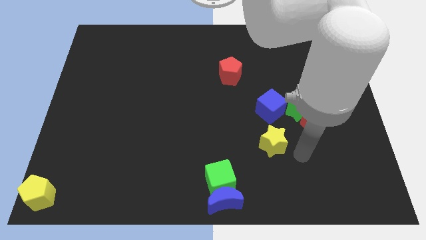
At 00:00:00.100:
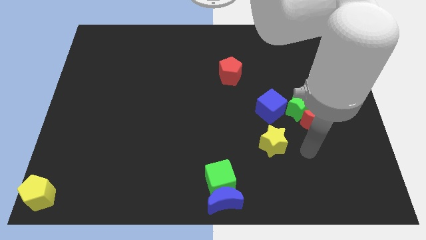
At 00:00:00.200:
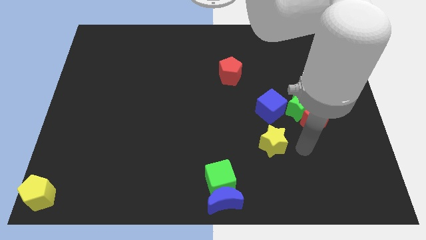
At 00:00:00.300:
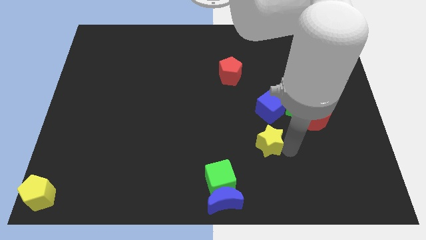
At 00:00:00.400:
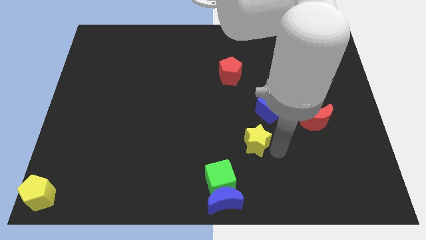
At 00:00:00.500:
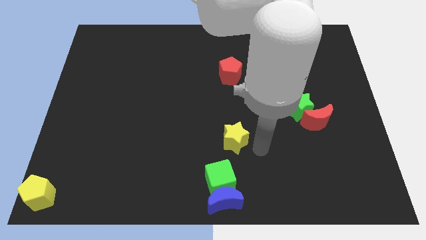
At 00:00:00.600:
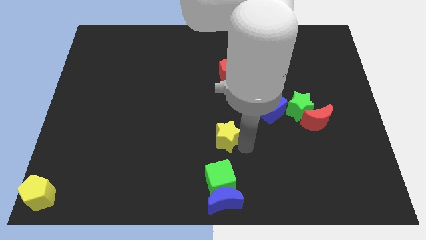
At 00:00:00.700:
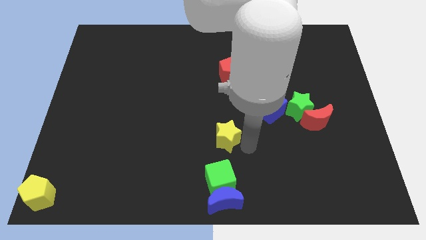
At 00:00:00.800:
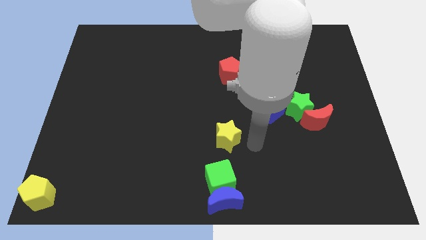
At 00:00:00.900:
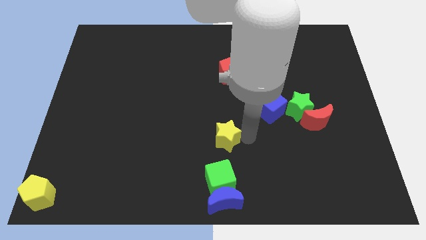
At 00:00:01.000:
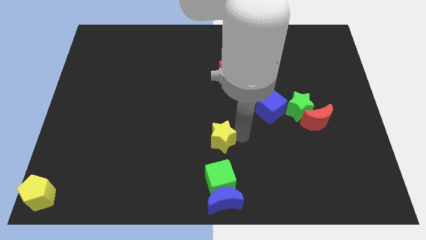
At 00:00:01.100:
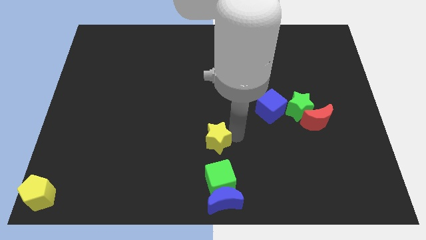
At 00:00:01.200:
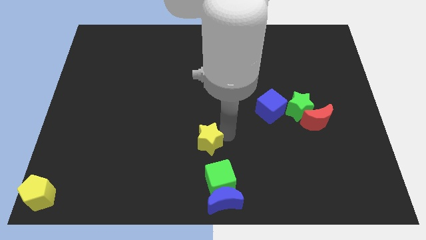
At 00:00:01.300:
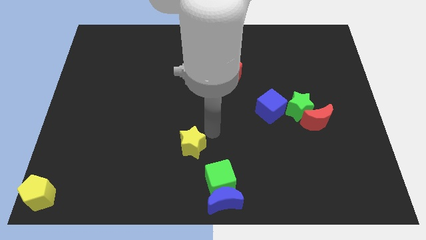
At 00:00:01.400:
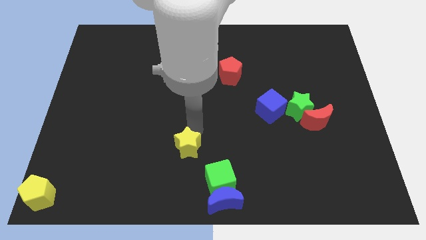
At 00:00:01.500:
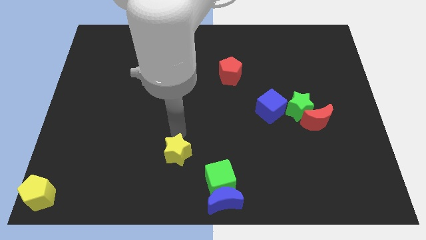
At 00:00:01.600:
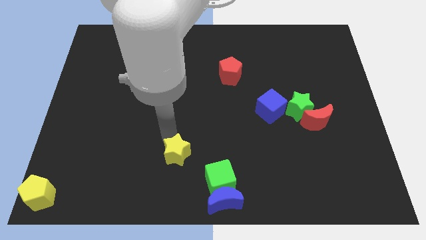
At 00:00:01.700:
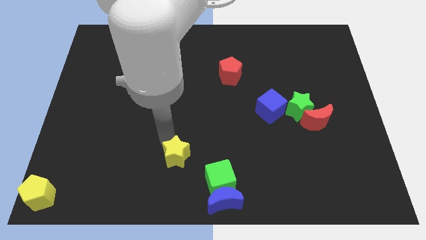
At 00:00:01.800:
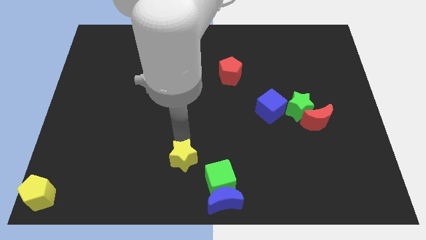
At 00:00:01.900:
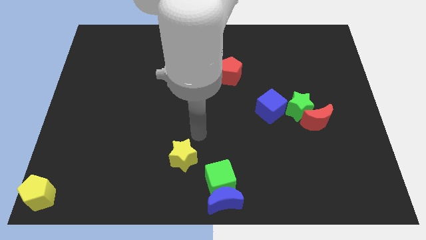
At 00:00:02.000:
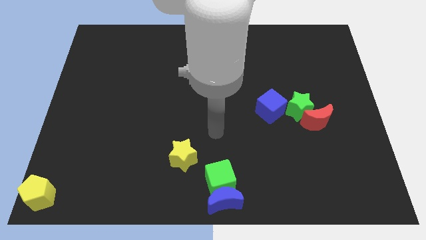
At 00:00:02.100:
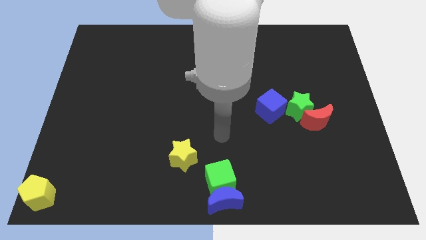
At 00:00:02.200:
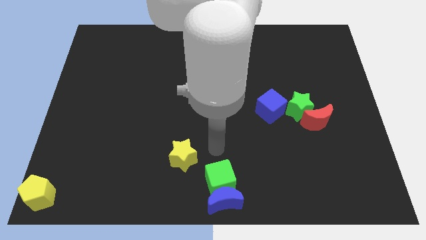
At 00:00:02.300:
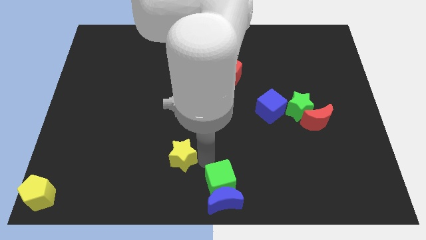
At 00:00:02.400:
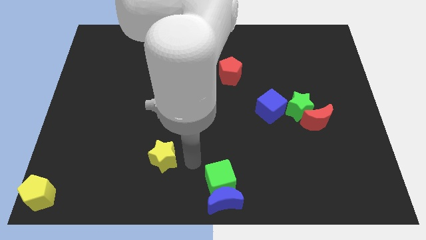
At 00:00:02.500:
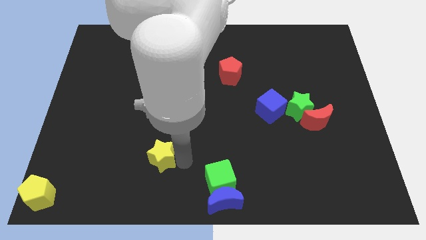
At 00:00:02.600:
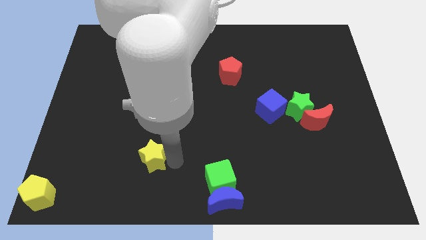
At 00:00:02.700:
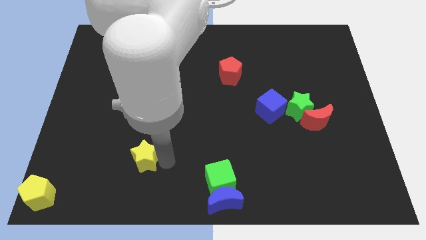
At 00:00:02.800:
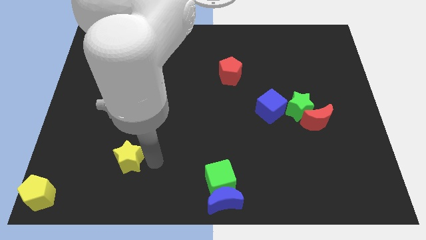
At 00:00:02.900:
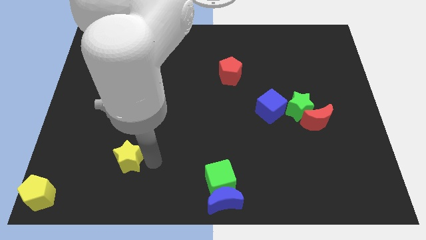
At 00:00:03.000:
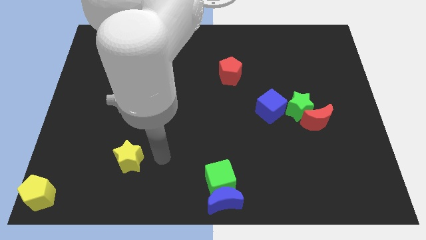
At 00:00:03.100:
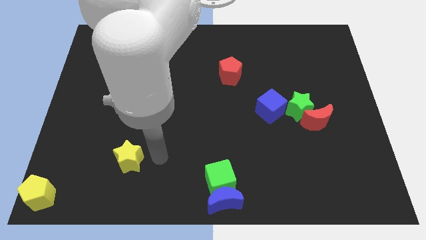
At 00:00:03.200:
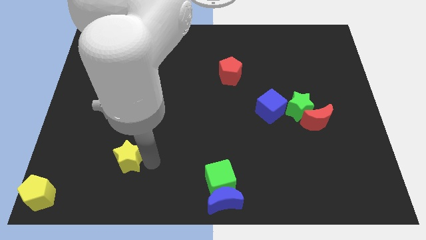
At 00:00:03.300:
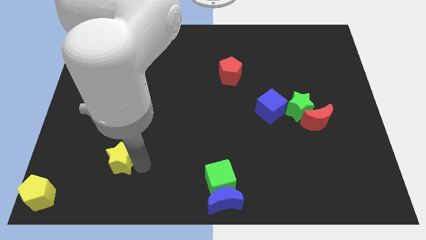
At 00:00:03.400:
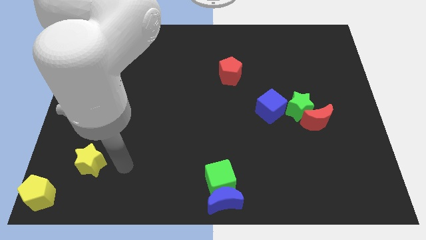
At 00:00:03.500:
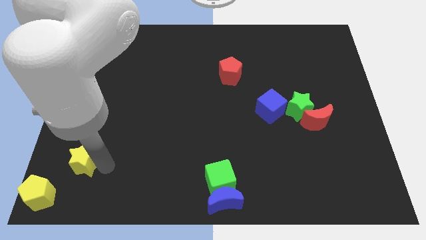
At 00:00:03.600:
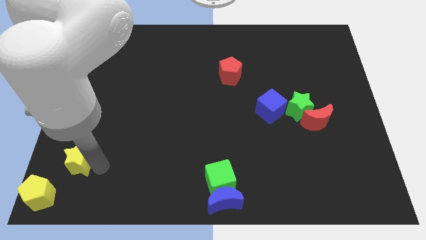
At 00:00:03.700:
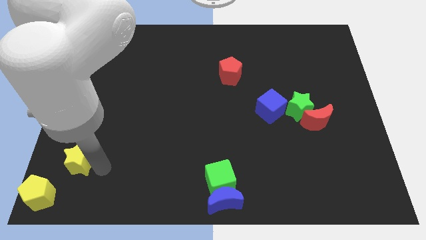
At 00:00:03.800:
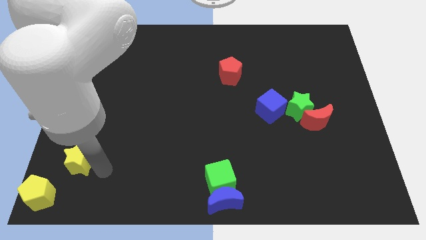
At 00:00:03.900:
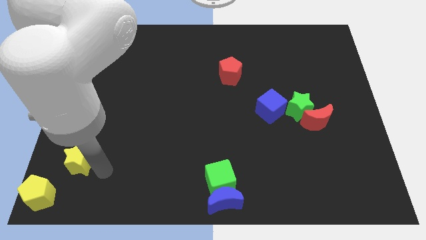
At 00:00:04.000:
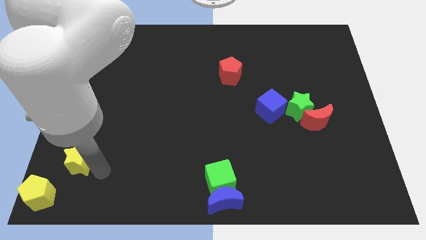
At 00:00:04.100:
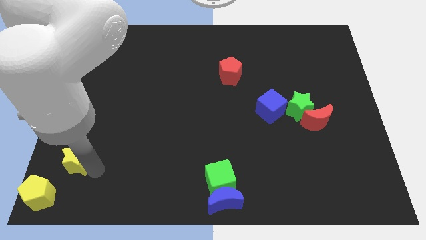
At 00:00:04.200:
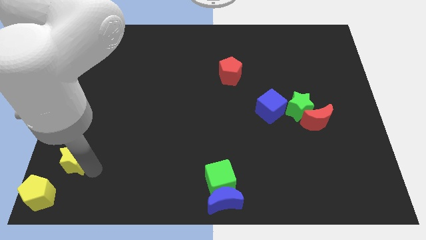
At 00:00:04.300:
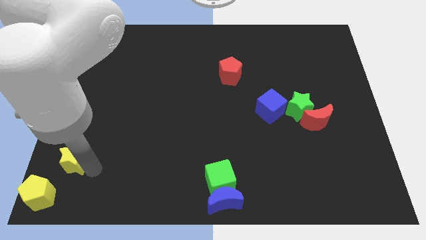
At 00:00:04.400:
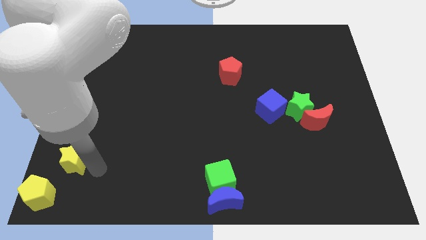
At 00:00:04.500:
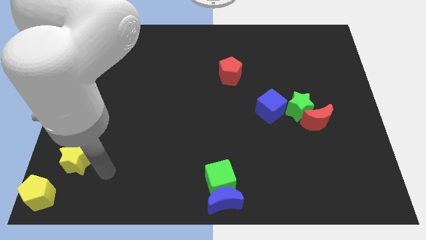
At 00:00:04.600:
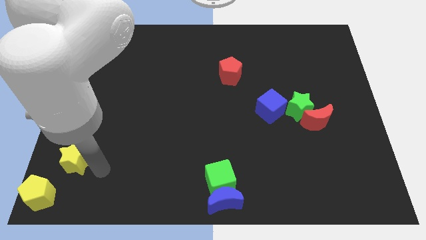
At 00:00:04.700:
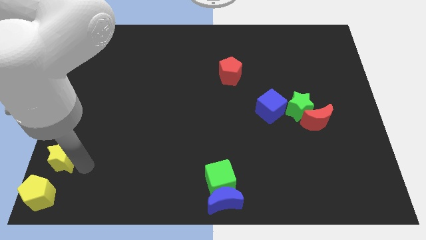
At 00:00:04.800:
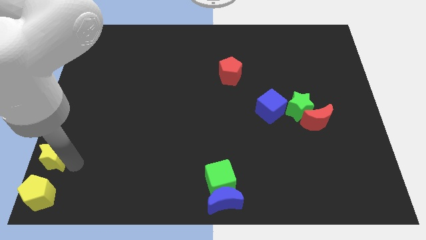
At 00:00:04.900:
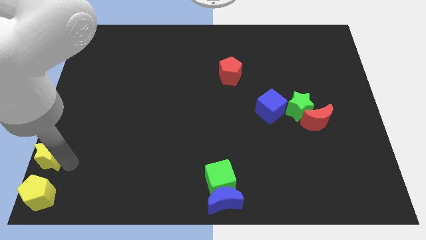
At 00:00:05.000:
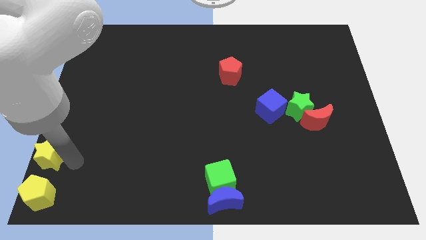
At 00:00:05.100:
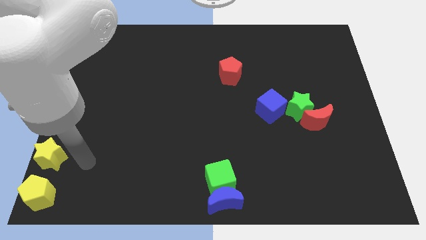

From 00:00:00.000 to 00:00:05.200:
place the yellow star above yellow pentagon

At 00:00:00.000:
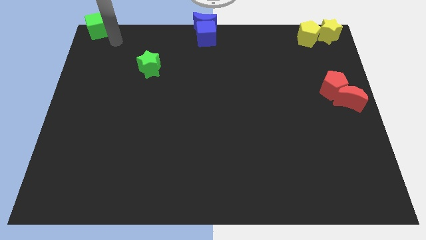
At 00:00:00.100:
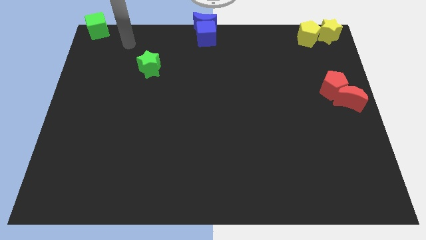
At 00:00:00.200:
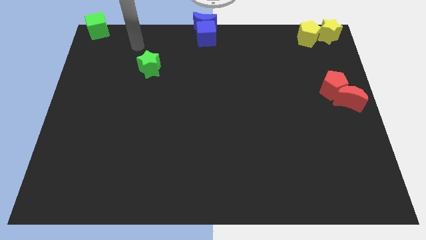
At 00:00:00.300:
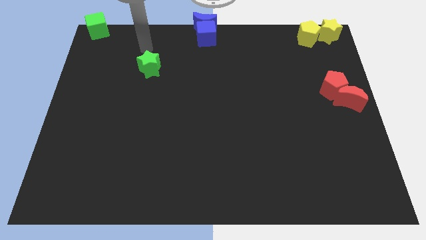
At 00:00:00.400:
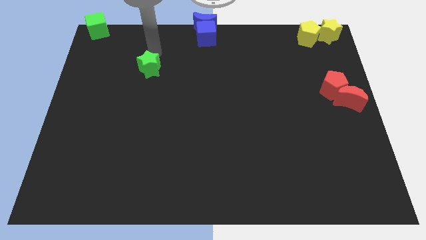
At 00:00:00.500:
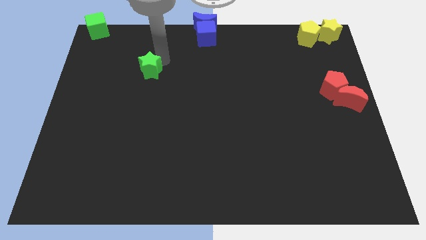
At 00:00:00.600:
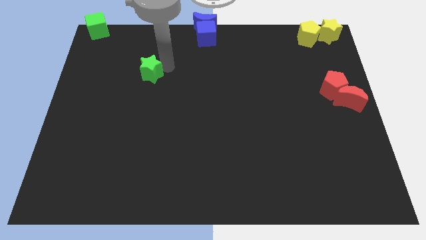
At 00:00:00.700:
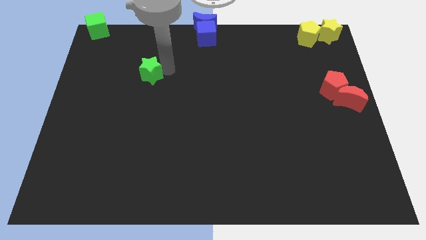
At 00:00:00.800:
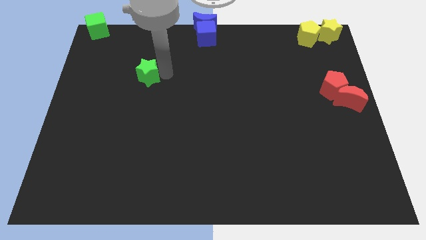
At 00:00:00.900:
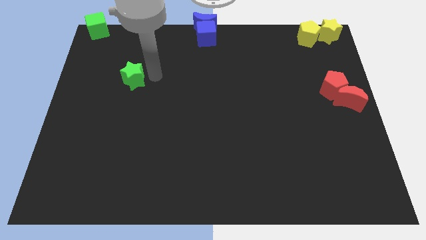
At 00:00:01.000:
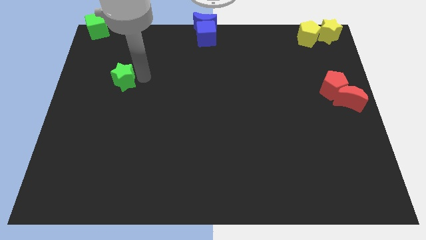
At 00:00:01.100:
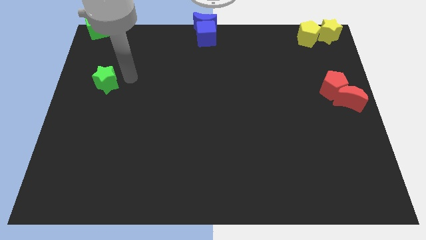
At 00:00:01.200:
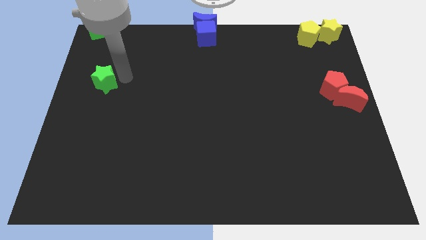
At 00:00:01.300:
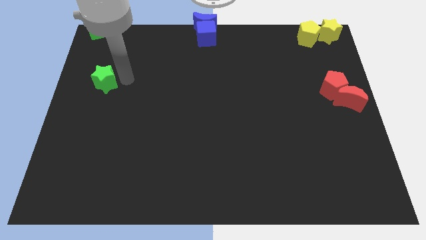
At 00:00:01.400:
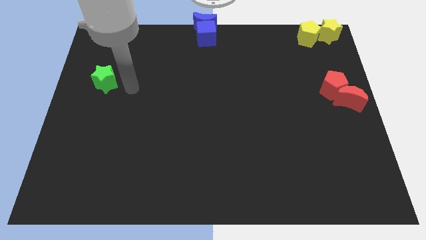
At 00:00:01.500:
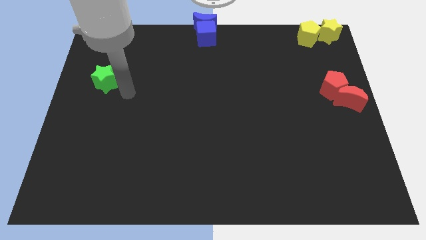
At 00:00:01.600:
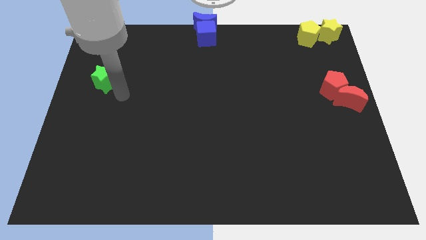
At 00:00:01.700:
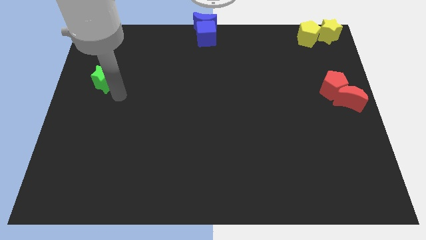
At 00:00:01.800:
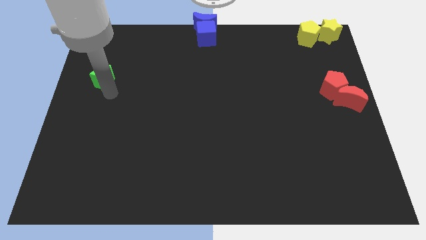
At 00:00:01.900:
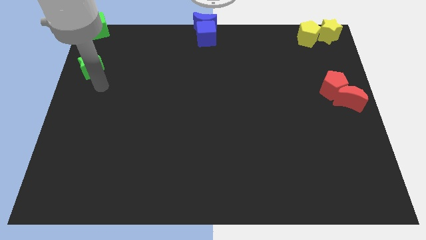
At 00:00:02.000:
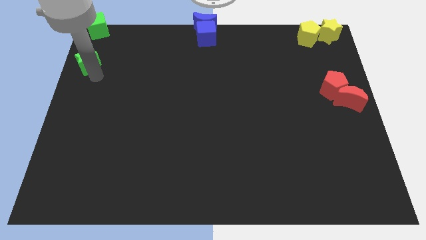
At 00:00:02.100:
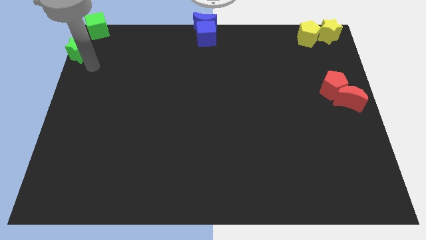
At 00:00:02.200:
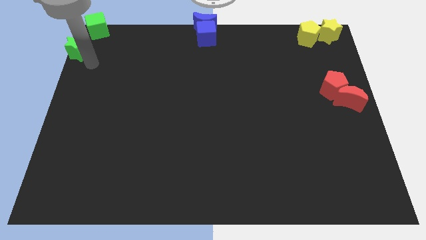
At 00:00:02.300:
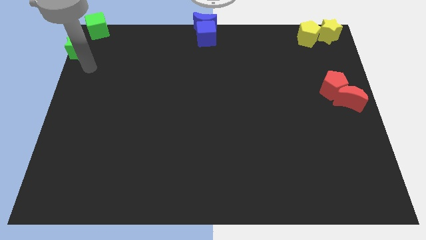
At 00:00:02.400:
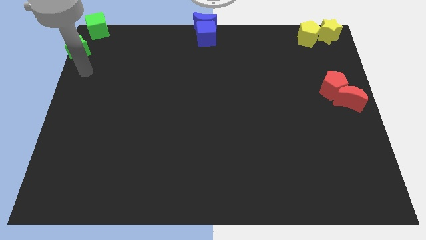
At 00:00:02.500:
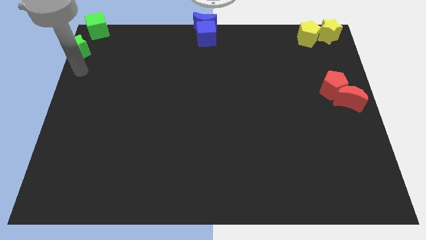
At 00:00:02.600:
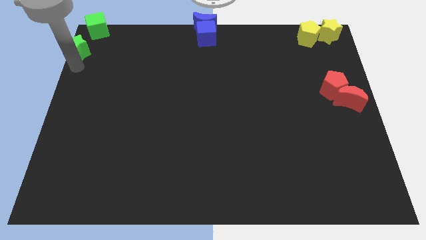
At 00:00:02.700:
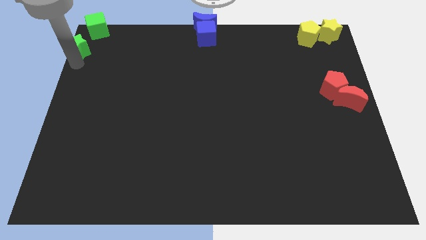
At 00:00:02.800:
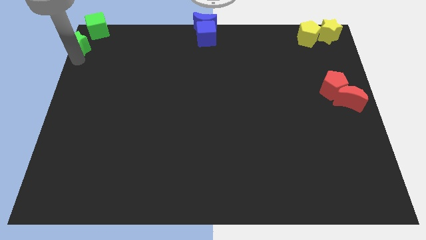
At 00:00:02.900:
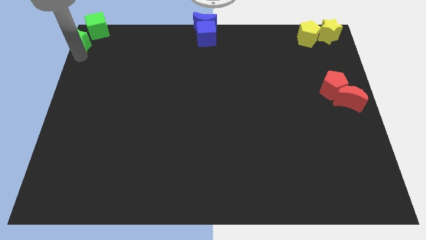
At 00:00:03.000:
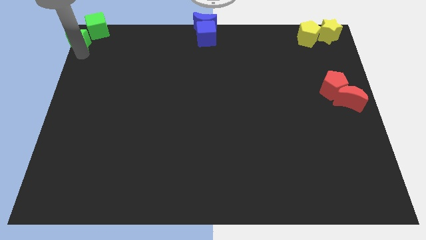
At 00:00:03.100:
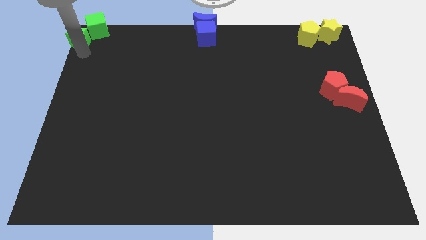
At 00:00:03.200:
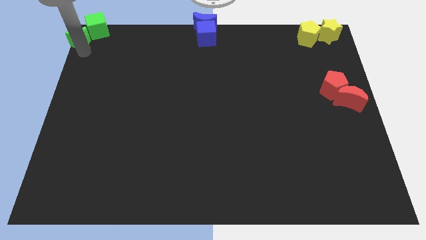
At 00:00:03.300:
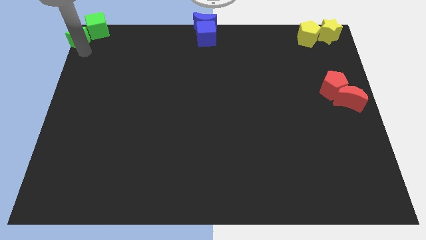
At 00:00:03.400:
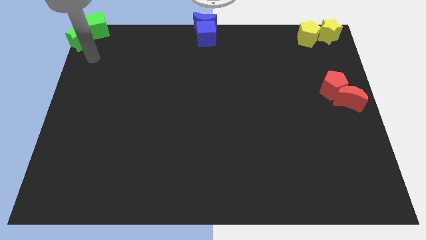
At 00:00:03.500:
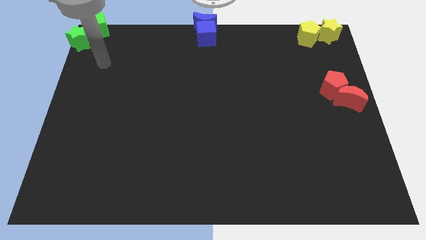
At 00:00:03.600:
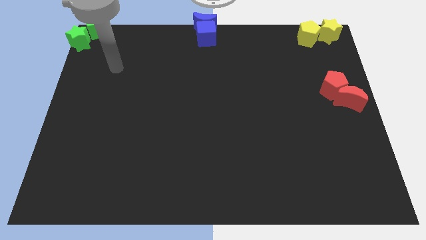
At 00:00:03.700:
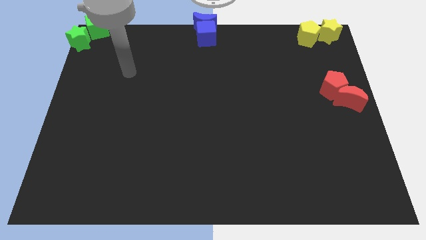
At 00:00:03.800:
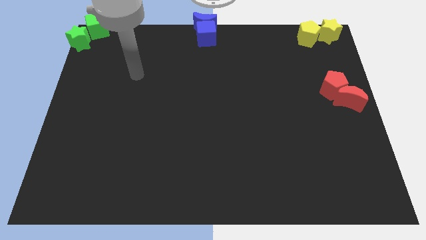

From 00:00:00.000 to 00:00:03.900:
drag the green star to the bottom left of green cube
